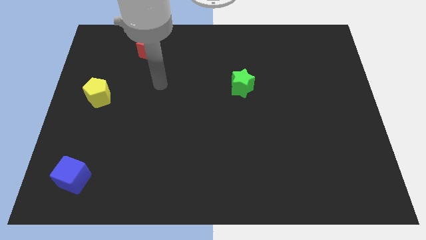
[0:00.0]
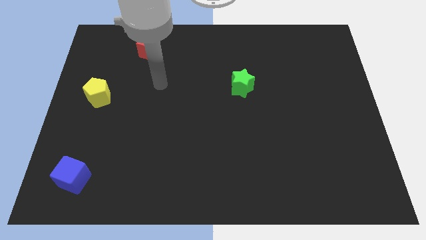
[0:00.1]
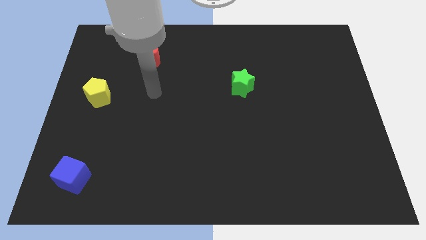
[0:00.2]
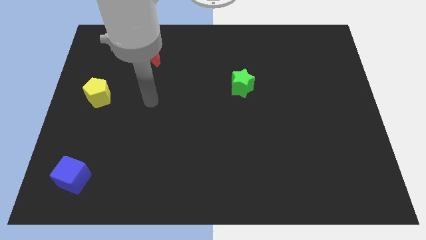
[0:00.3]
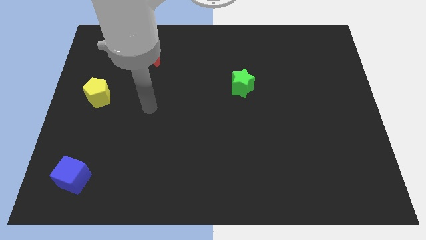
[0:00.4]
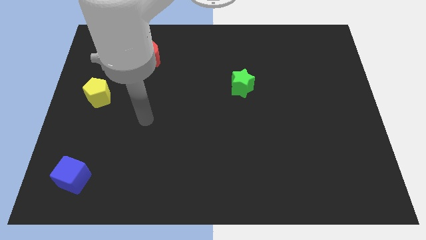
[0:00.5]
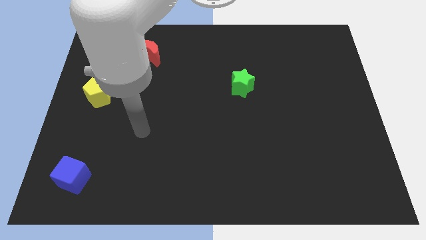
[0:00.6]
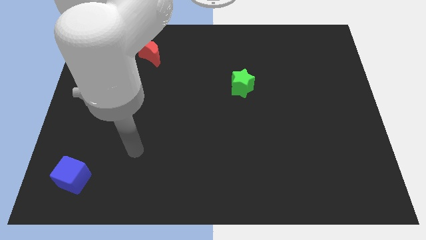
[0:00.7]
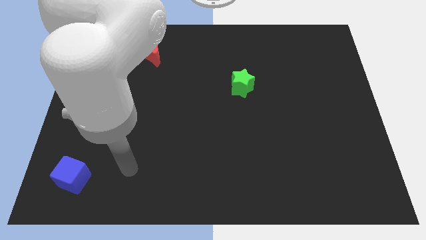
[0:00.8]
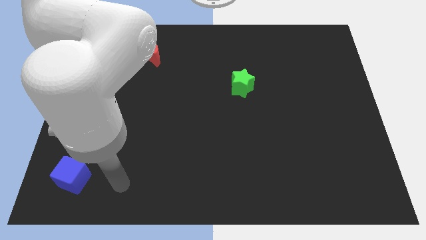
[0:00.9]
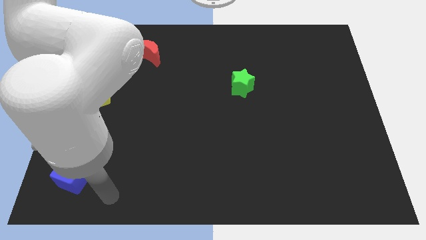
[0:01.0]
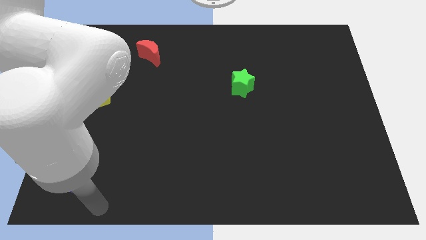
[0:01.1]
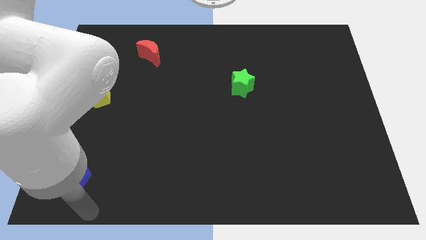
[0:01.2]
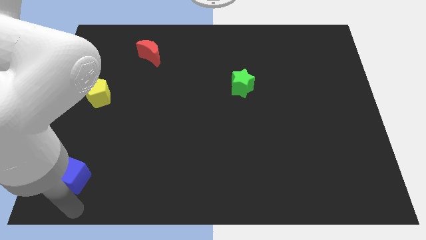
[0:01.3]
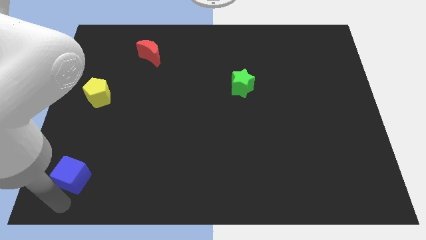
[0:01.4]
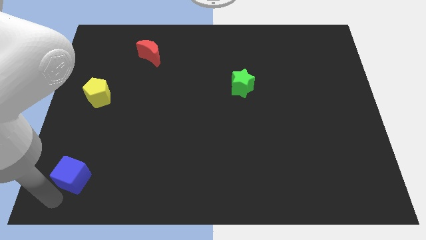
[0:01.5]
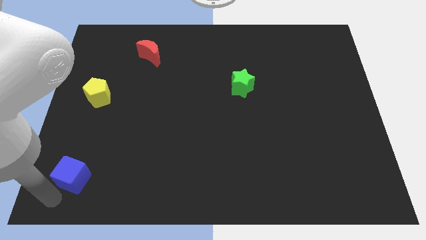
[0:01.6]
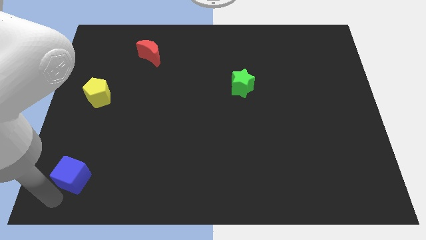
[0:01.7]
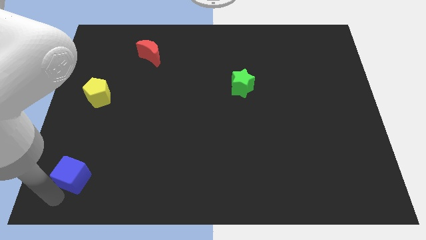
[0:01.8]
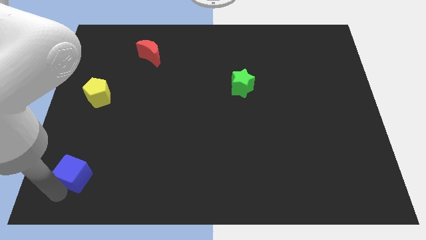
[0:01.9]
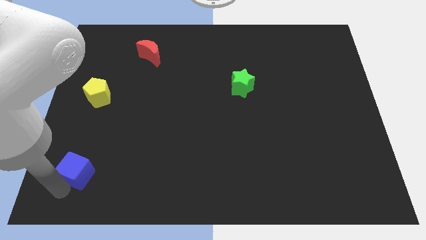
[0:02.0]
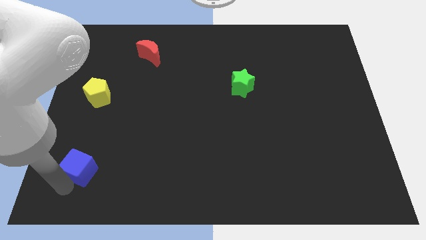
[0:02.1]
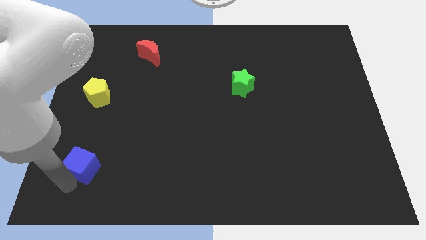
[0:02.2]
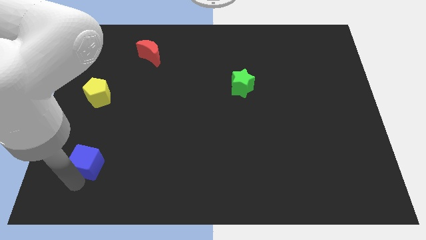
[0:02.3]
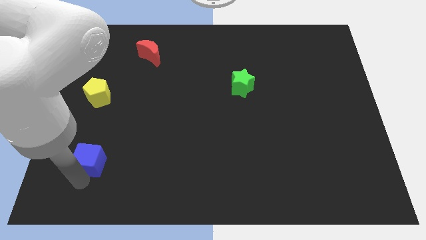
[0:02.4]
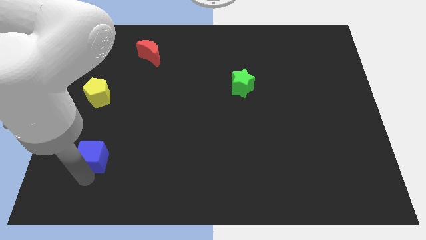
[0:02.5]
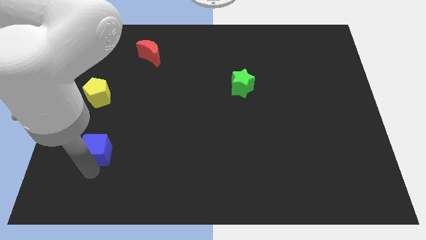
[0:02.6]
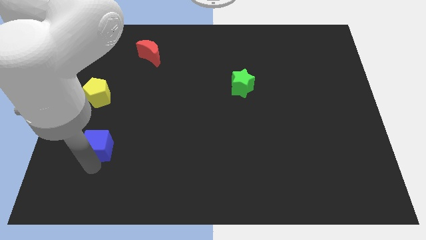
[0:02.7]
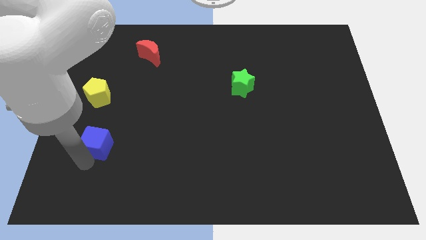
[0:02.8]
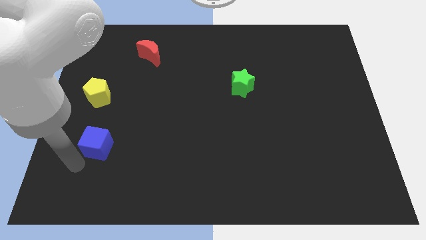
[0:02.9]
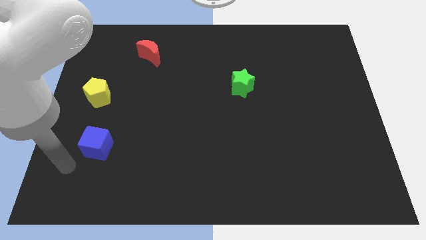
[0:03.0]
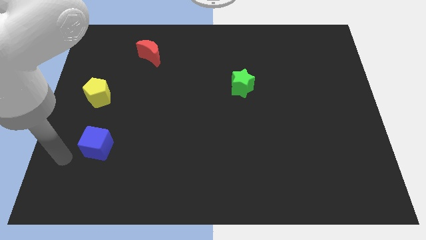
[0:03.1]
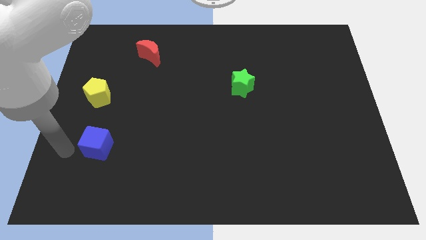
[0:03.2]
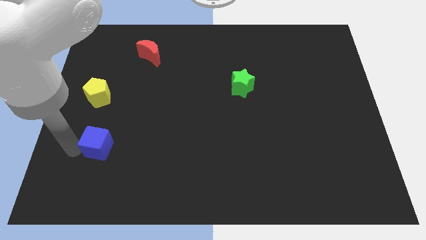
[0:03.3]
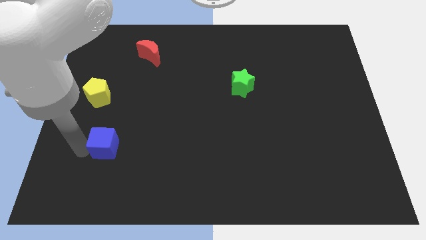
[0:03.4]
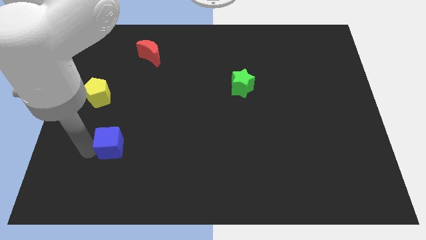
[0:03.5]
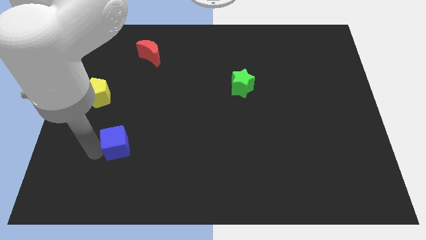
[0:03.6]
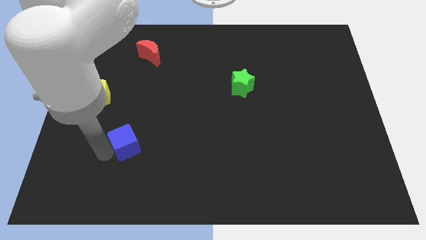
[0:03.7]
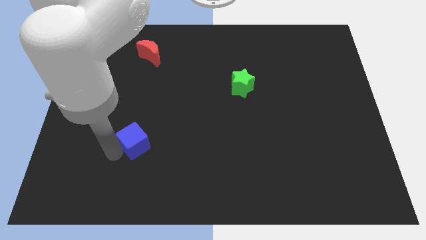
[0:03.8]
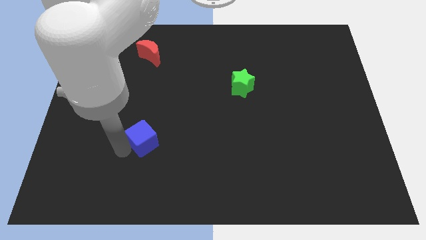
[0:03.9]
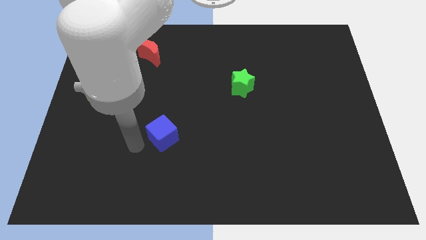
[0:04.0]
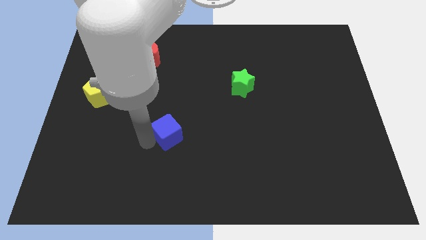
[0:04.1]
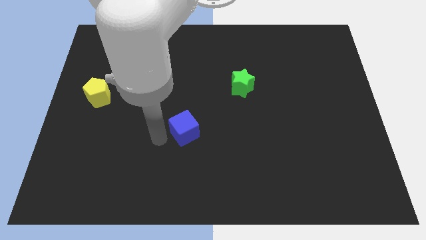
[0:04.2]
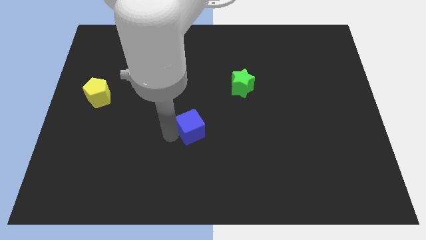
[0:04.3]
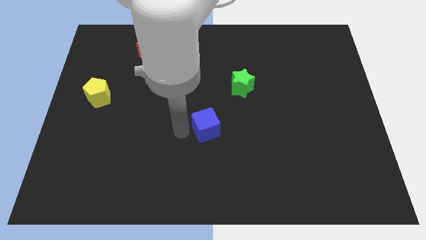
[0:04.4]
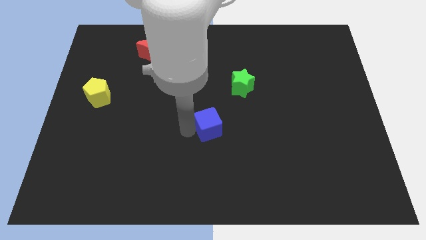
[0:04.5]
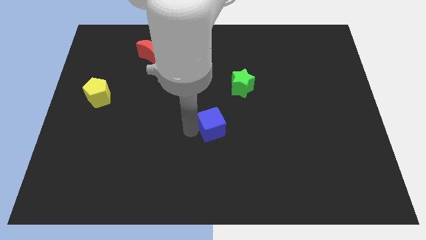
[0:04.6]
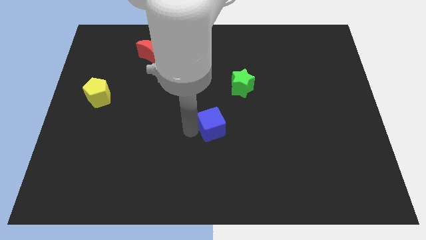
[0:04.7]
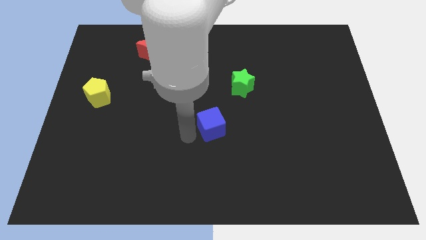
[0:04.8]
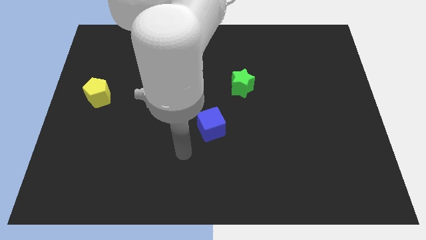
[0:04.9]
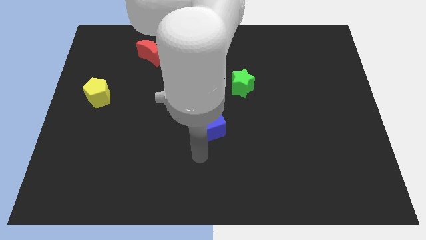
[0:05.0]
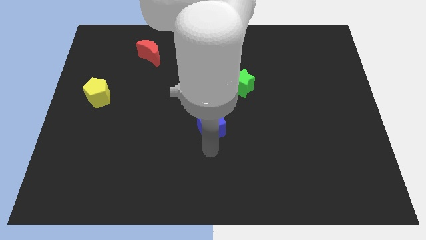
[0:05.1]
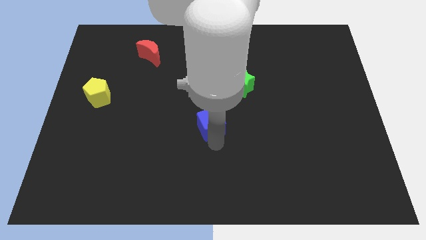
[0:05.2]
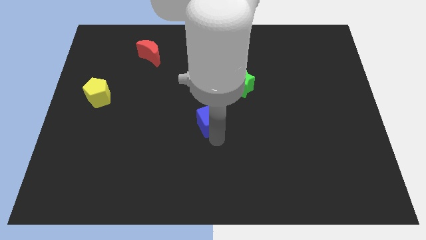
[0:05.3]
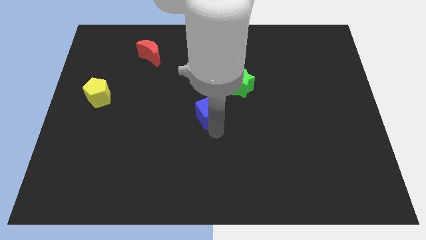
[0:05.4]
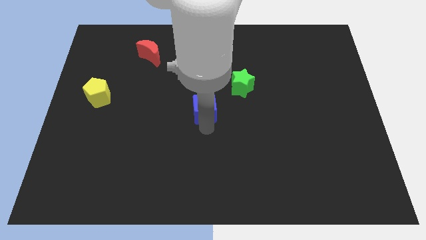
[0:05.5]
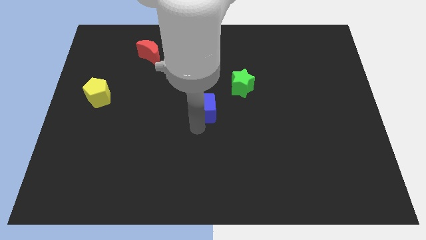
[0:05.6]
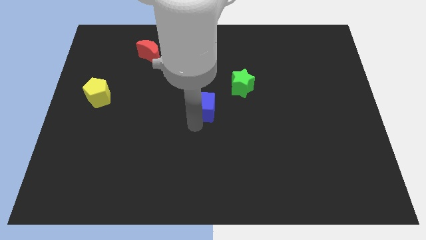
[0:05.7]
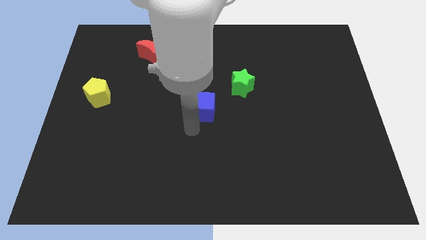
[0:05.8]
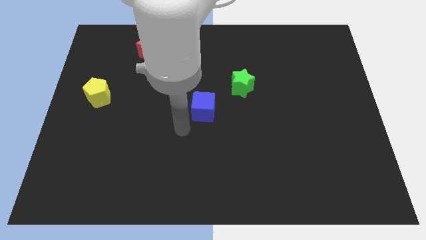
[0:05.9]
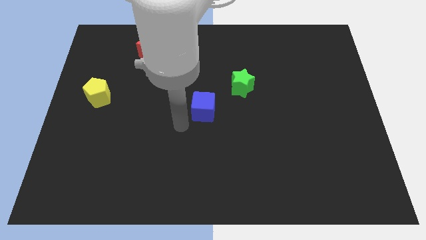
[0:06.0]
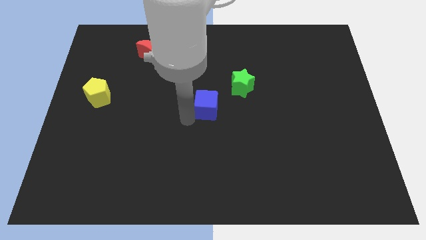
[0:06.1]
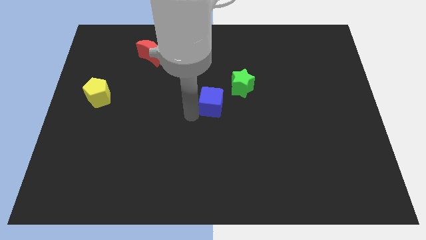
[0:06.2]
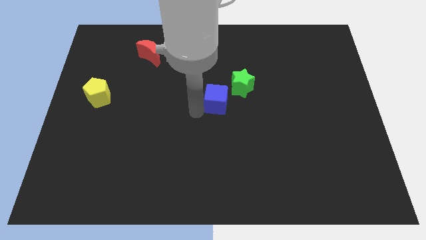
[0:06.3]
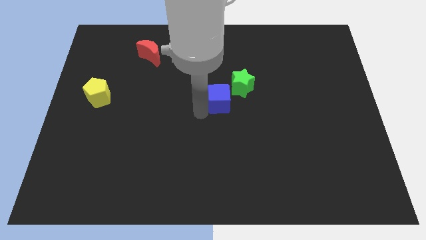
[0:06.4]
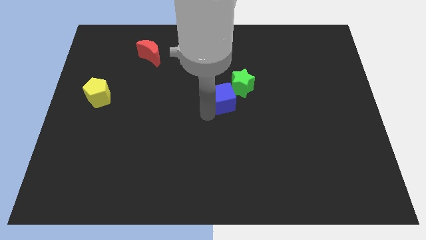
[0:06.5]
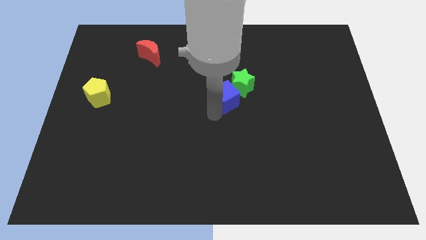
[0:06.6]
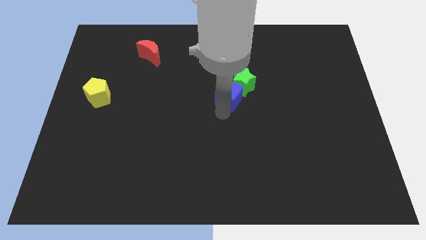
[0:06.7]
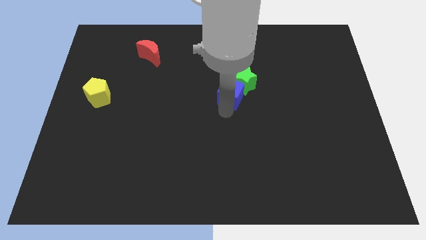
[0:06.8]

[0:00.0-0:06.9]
put the cube towards the green star

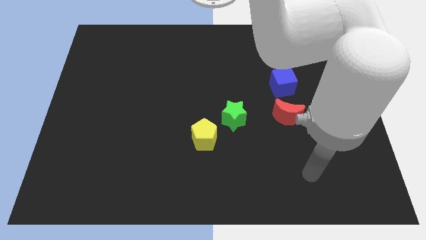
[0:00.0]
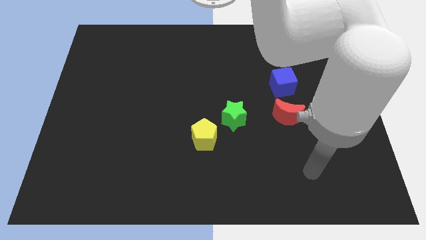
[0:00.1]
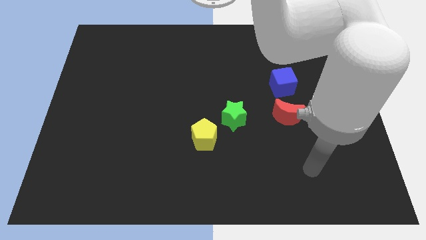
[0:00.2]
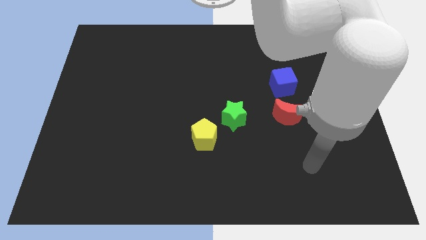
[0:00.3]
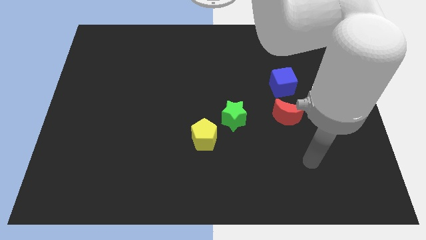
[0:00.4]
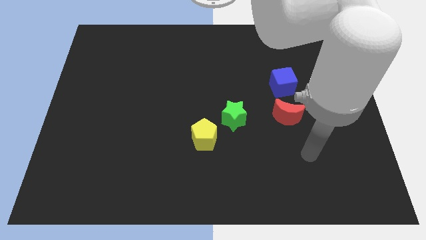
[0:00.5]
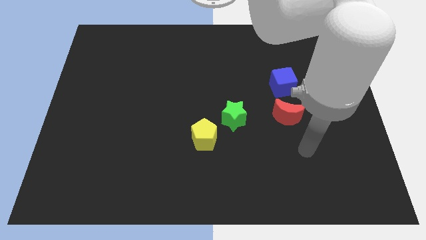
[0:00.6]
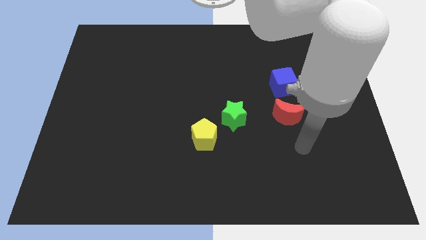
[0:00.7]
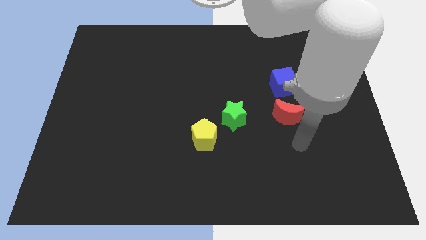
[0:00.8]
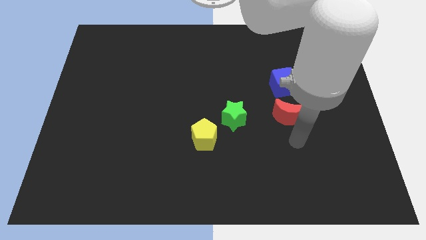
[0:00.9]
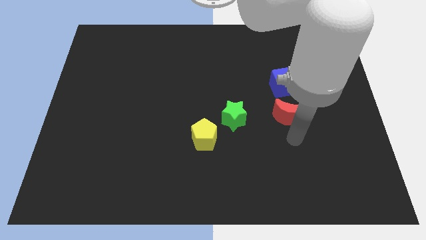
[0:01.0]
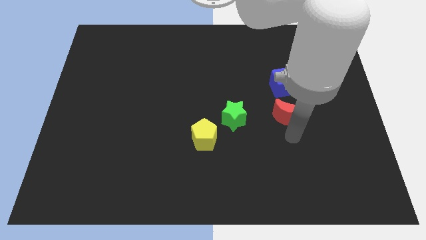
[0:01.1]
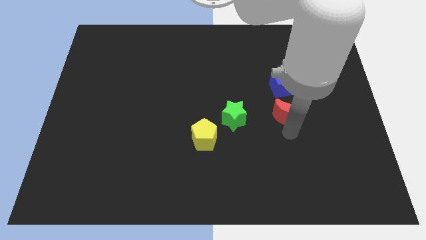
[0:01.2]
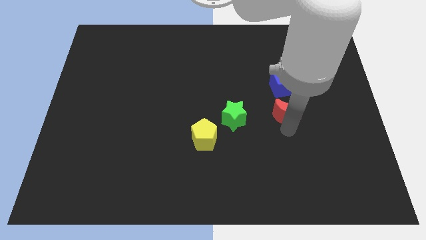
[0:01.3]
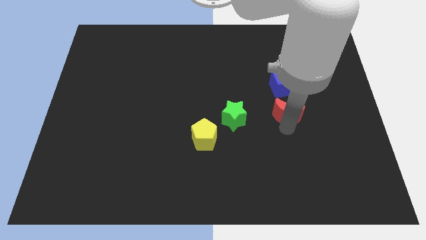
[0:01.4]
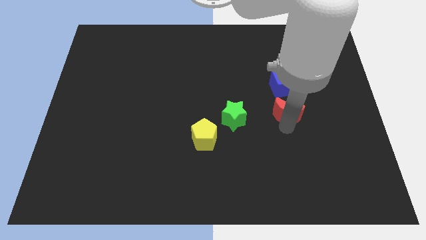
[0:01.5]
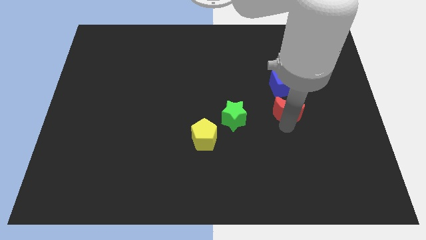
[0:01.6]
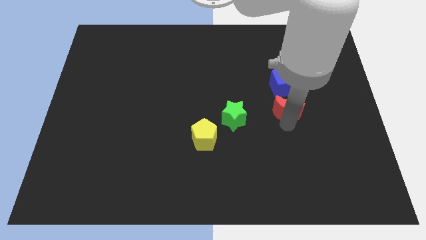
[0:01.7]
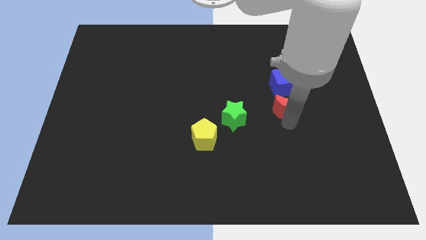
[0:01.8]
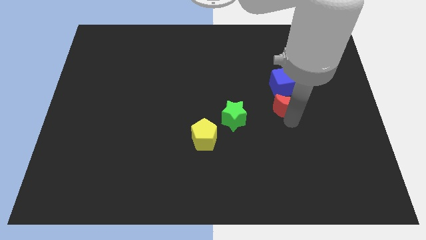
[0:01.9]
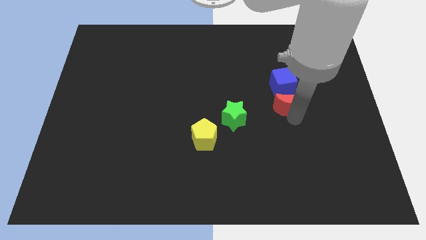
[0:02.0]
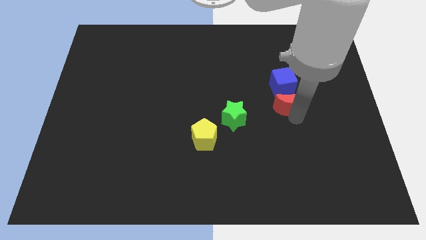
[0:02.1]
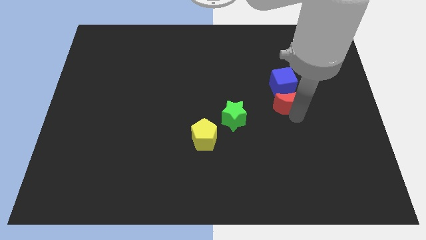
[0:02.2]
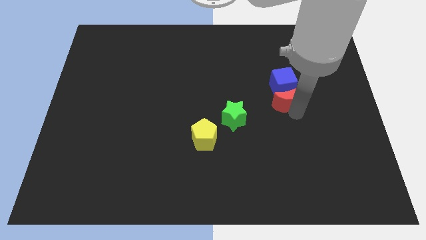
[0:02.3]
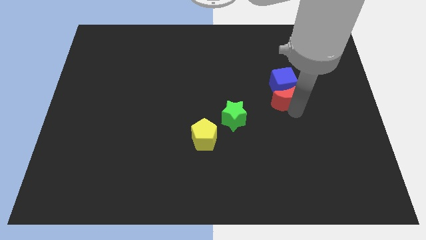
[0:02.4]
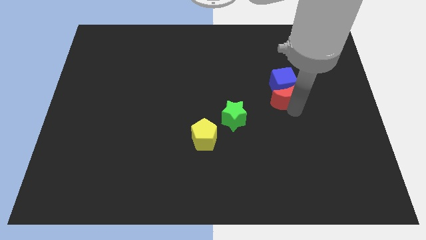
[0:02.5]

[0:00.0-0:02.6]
put the moon close to the cube
